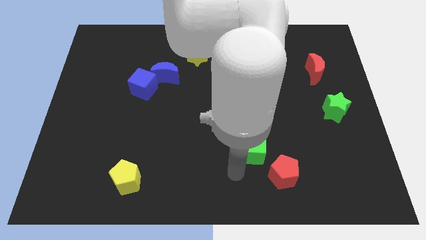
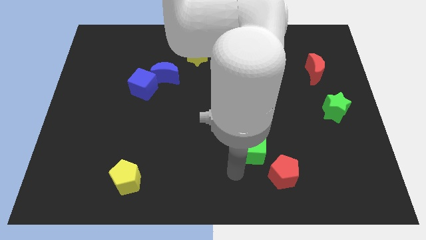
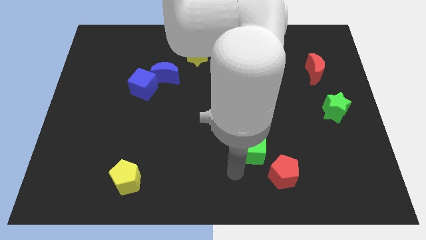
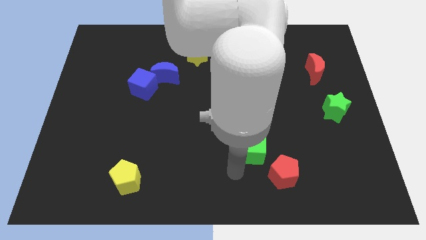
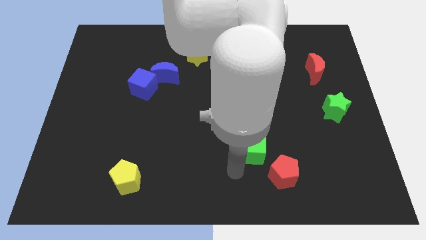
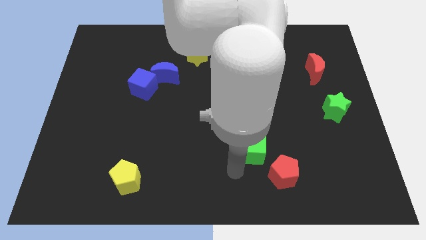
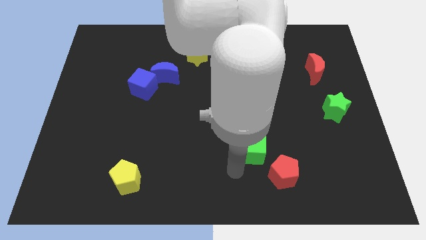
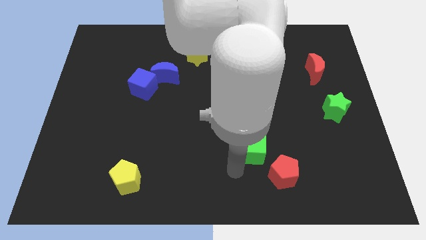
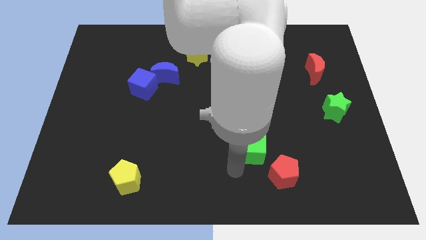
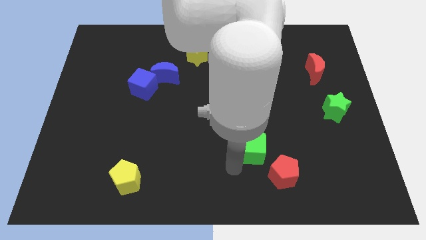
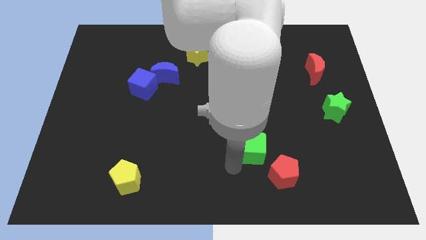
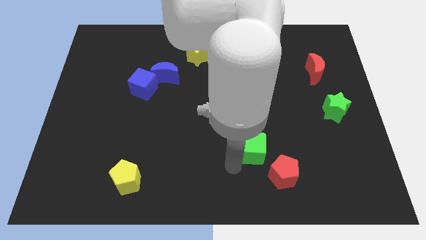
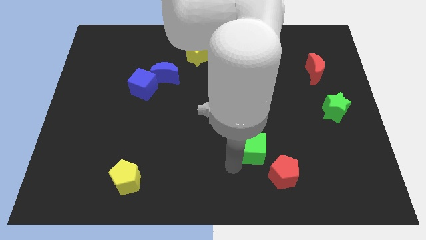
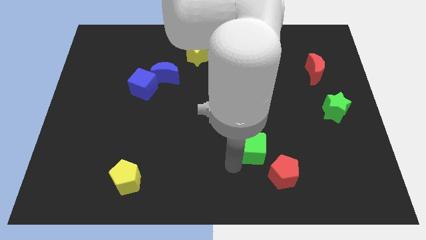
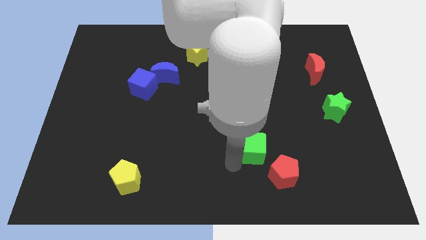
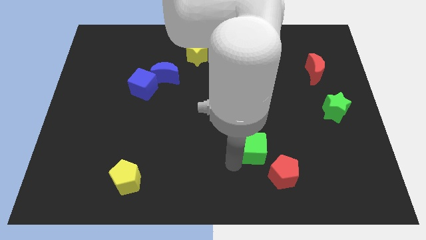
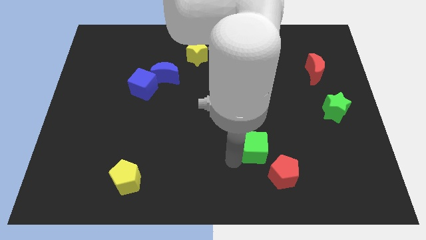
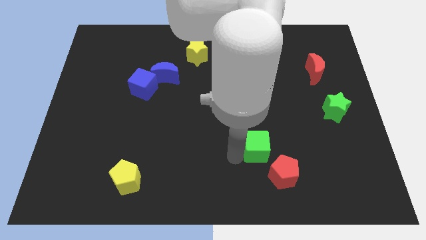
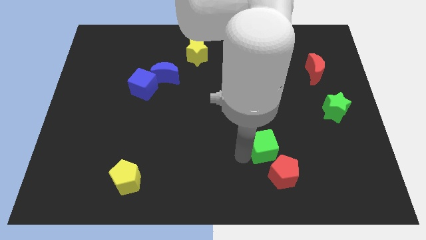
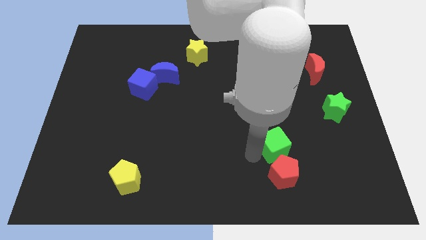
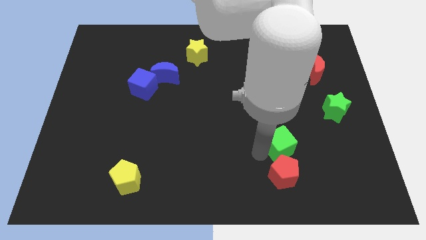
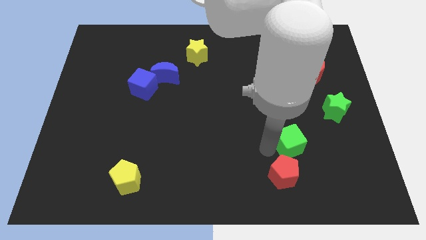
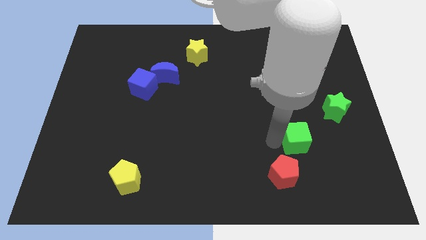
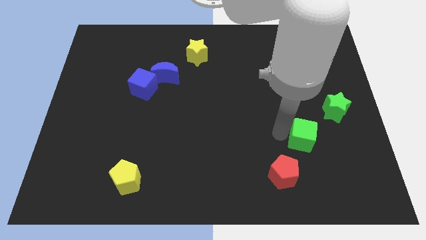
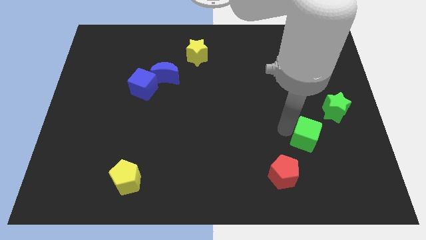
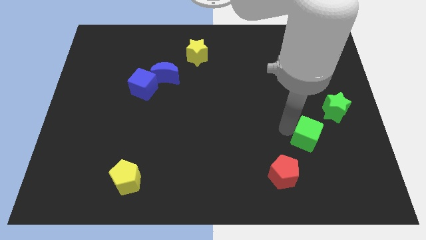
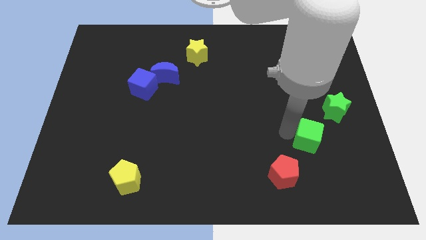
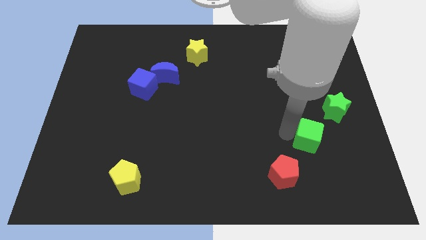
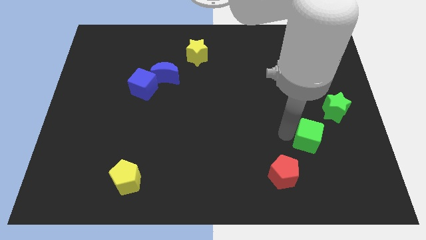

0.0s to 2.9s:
move the green cube in between the green star and red pentagon

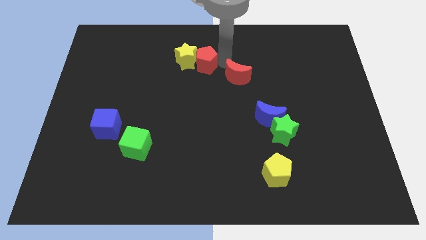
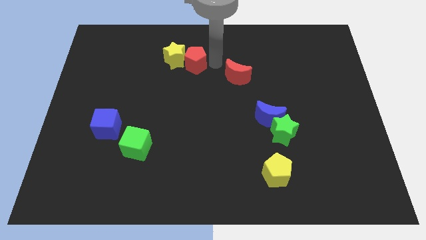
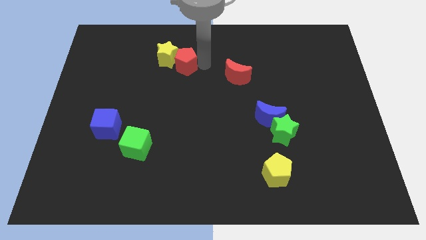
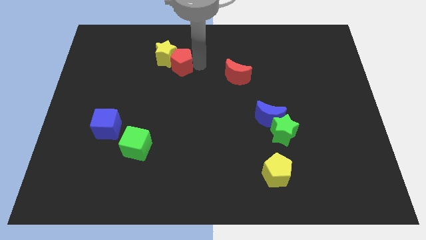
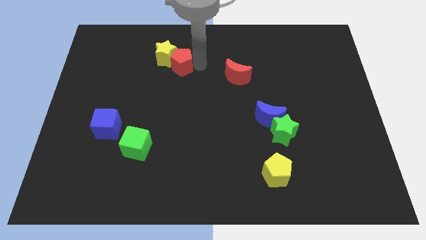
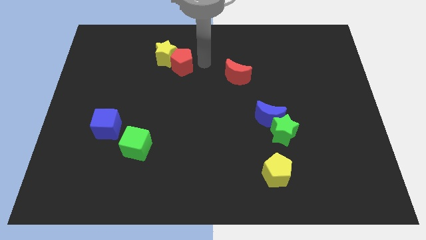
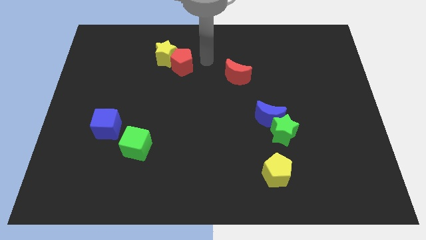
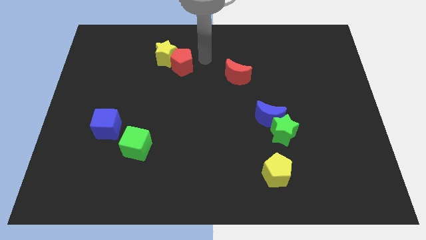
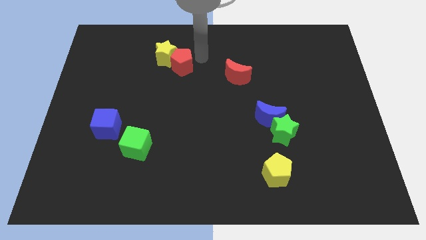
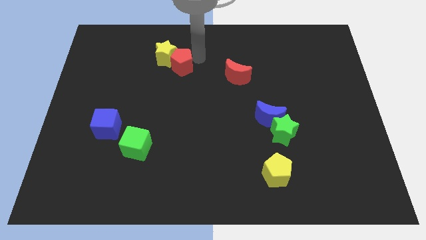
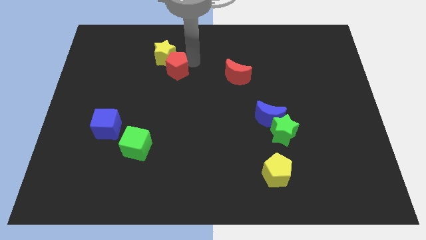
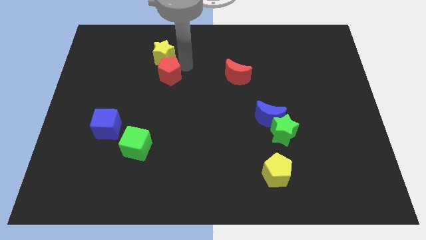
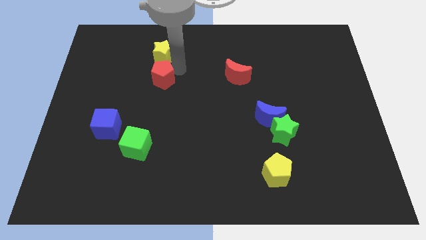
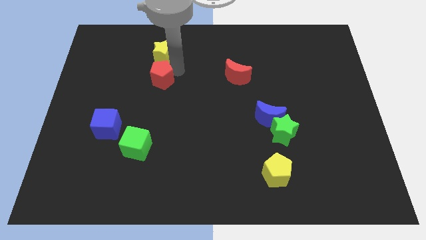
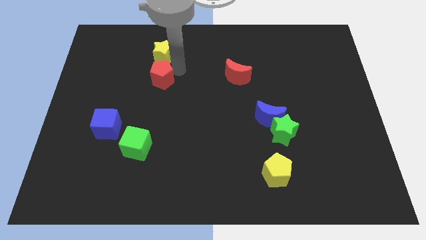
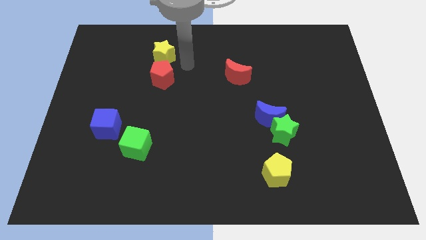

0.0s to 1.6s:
push the red pentagon to the bottom side of the yellow star

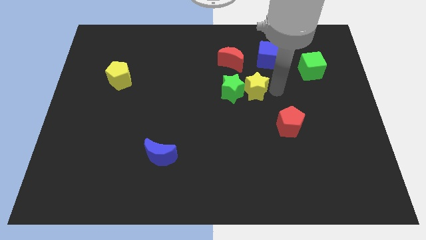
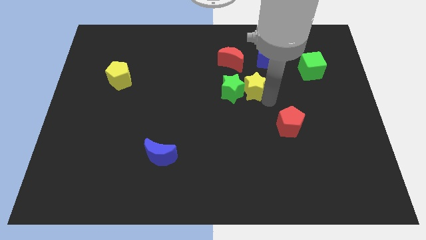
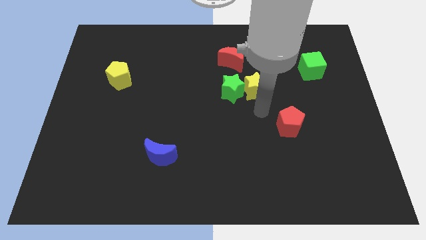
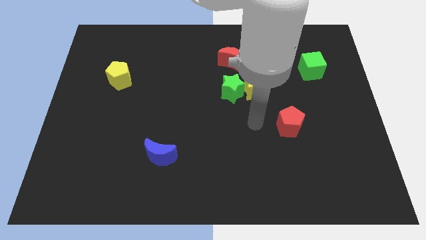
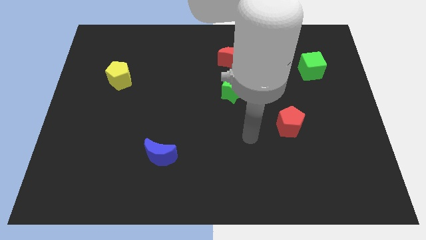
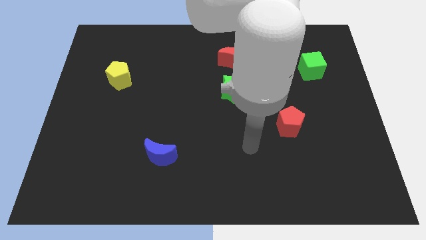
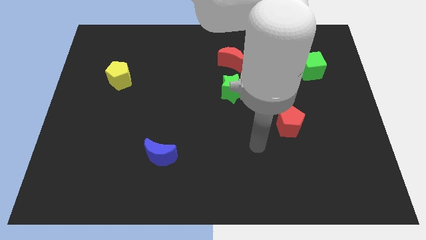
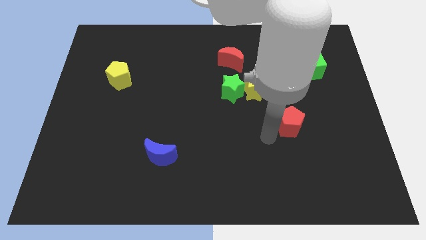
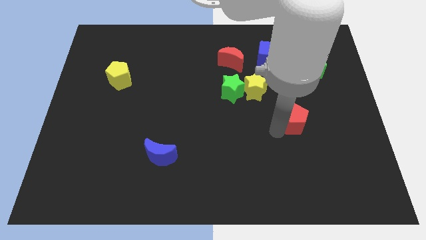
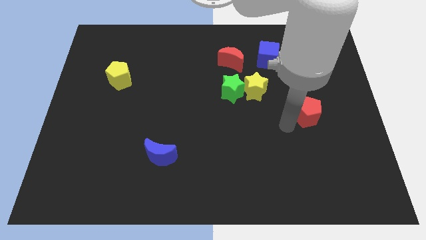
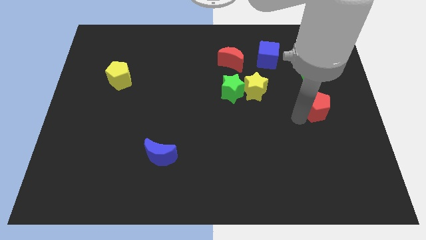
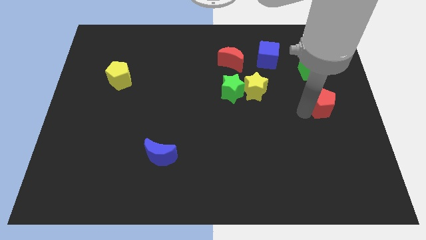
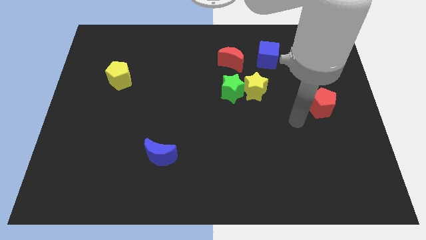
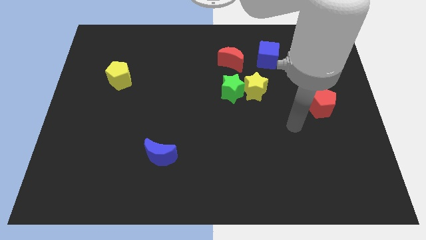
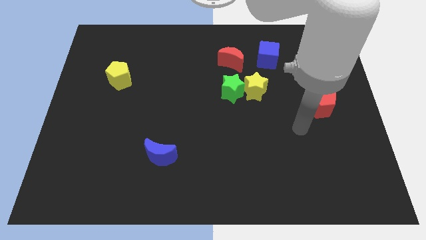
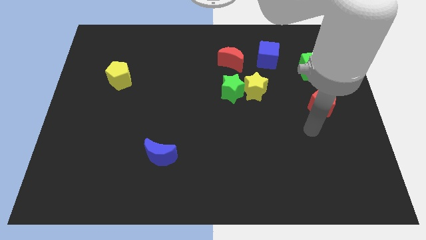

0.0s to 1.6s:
push the red pentagon towards the right center of the board

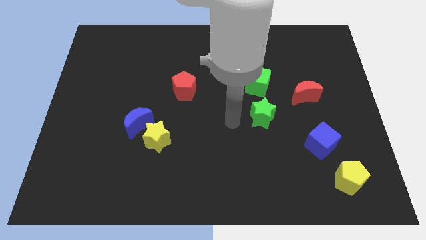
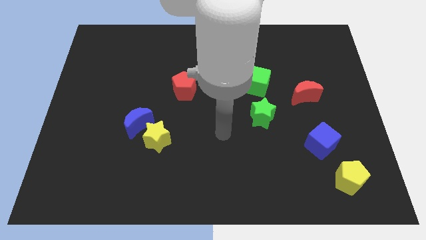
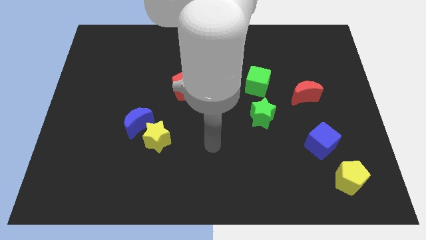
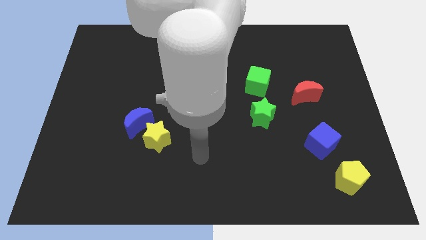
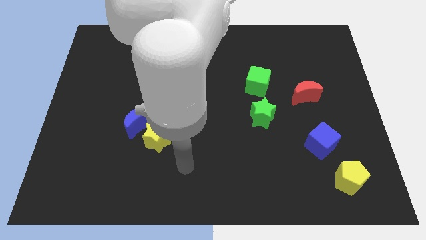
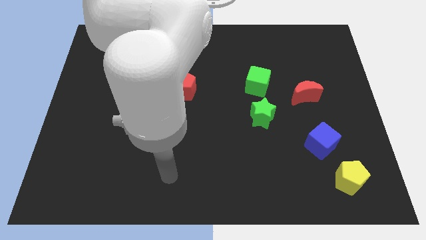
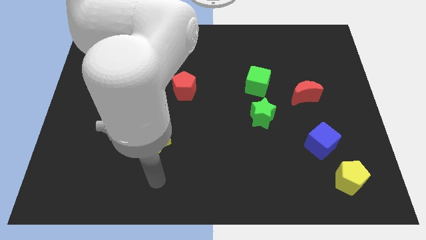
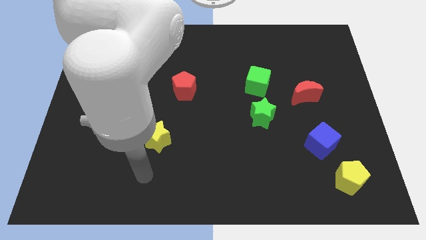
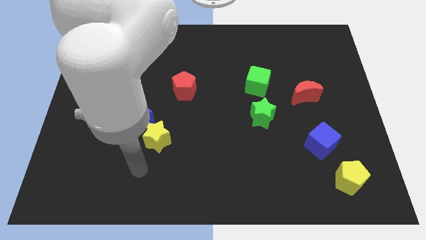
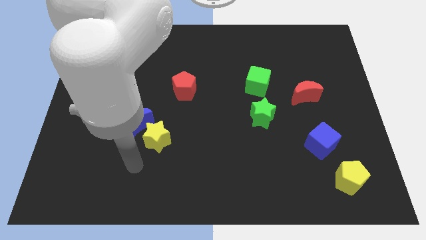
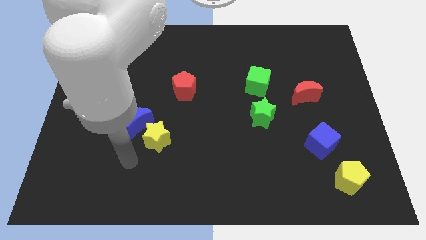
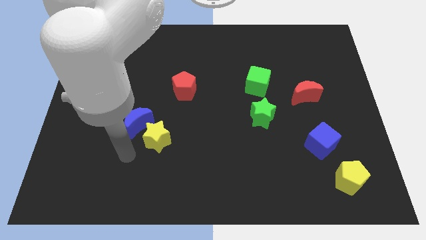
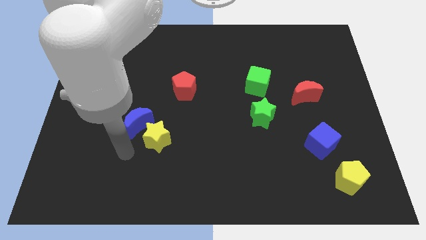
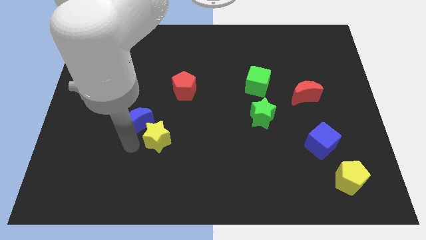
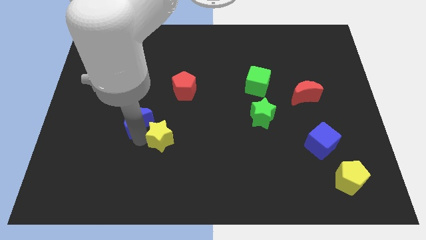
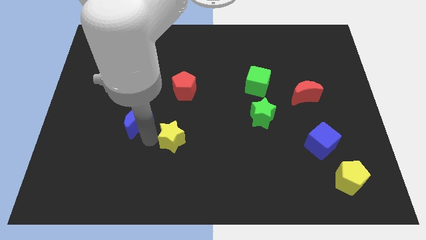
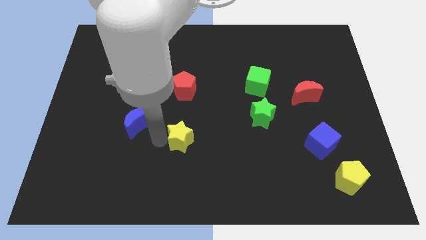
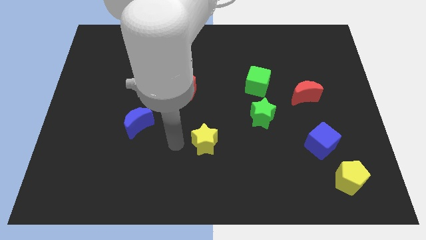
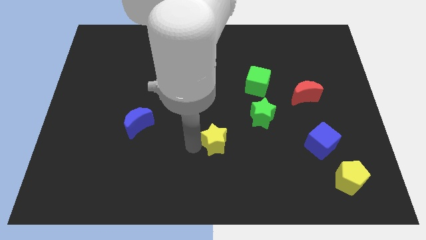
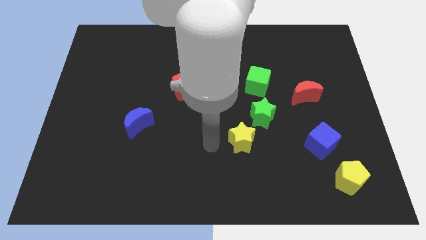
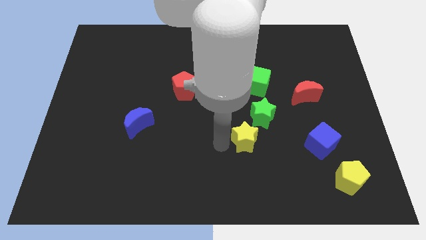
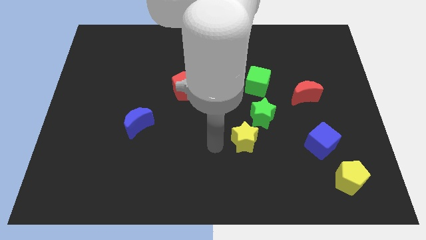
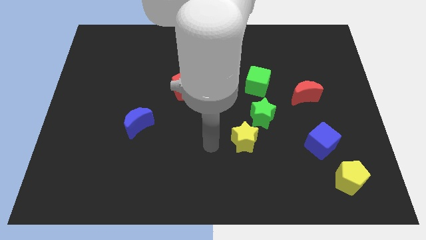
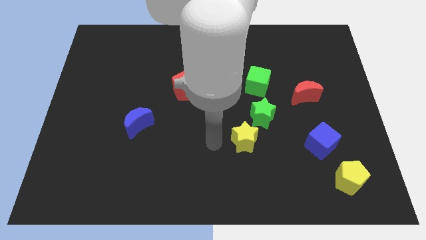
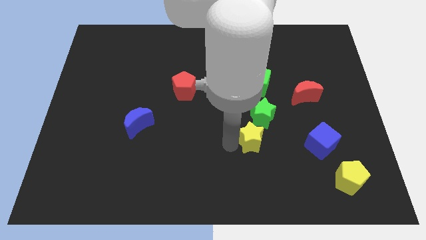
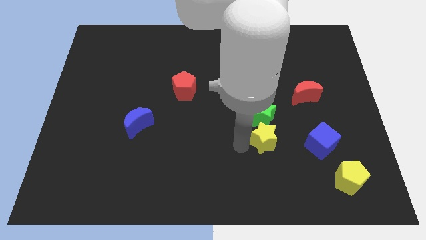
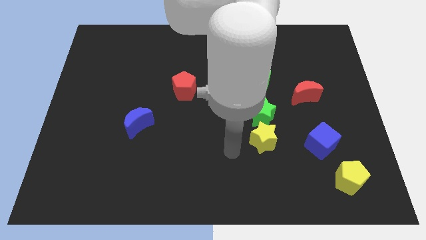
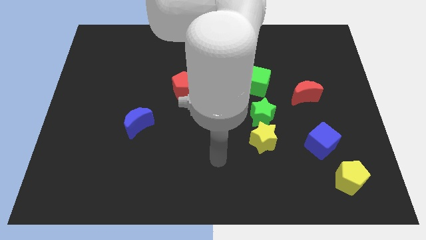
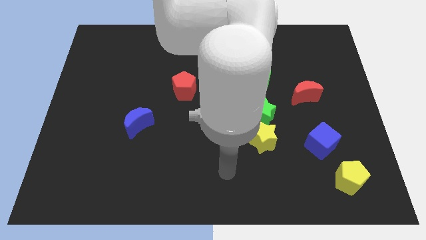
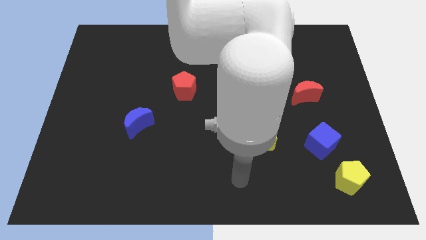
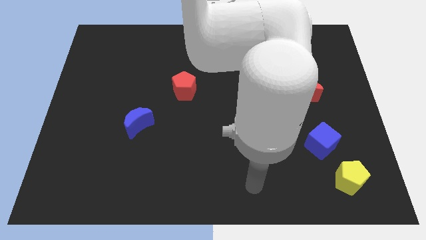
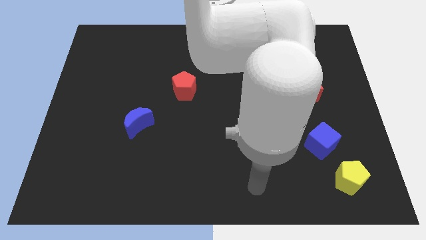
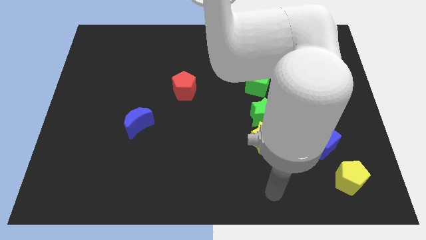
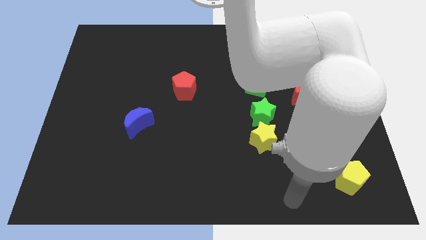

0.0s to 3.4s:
place the yellow star at the bottom side of the green star
